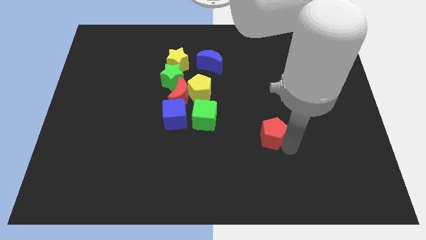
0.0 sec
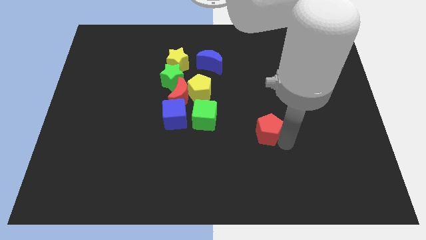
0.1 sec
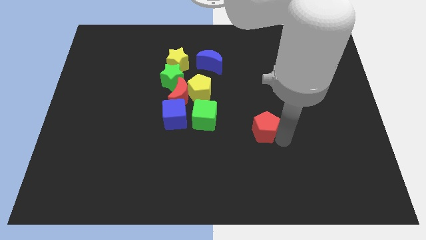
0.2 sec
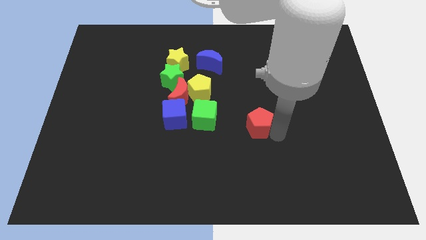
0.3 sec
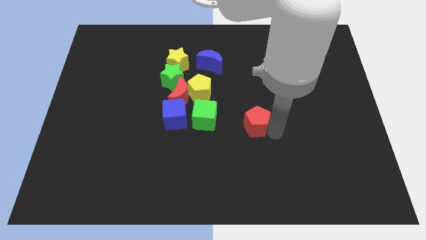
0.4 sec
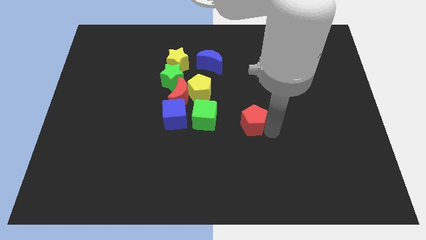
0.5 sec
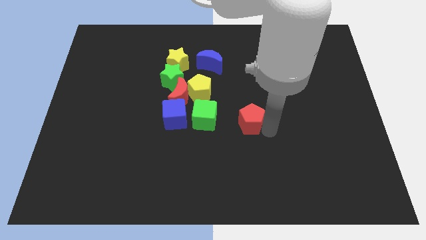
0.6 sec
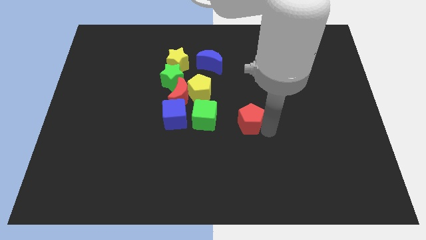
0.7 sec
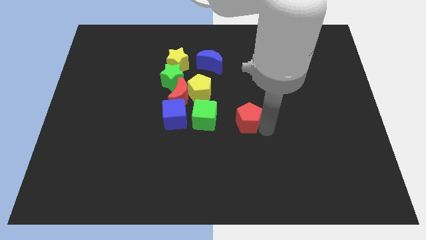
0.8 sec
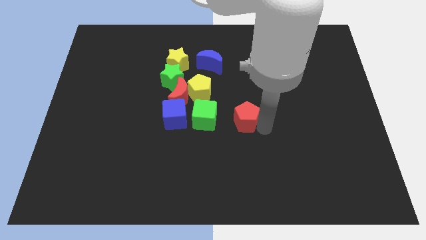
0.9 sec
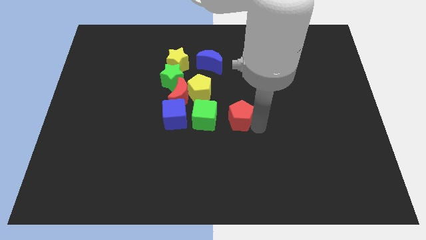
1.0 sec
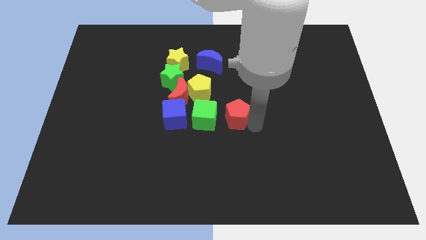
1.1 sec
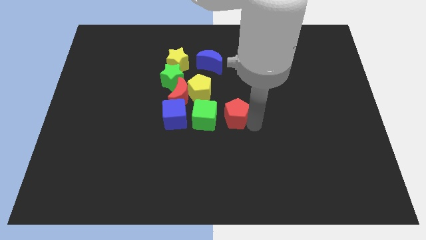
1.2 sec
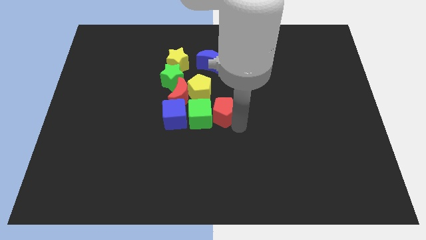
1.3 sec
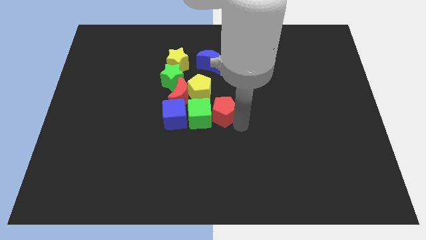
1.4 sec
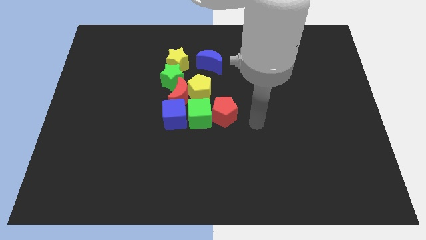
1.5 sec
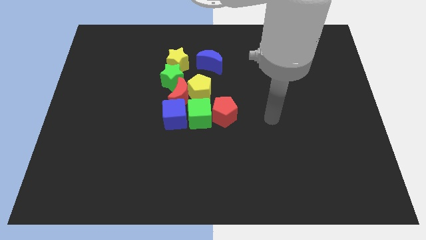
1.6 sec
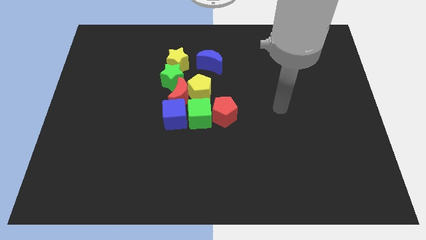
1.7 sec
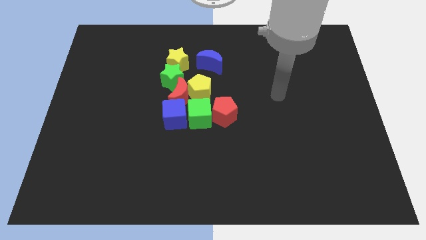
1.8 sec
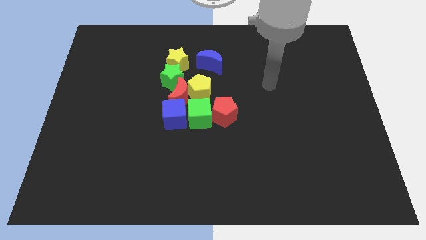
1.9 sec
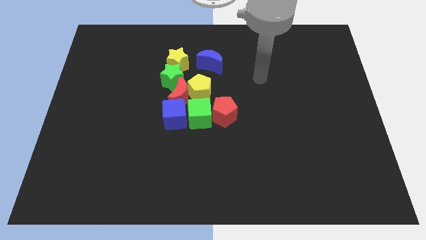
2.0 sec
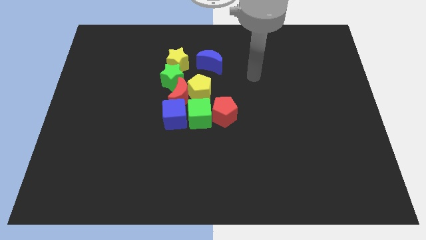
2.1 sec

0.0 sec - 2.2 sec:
push the red pentagon into the green cube

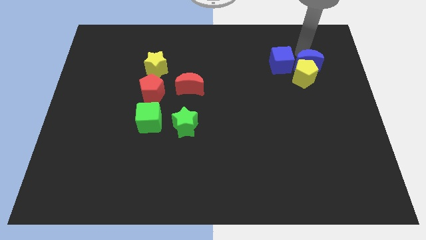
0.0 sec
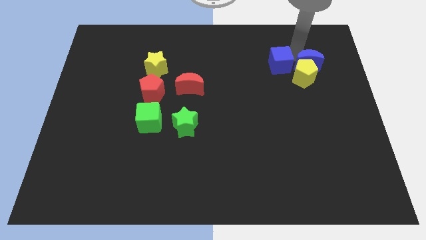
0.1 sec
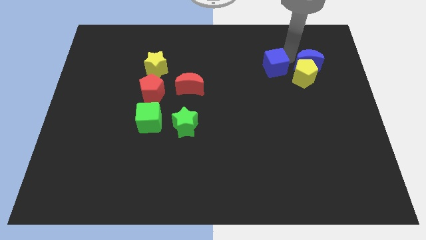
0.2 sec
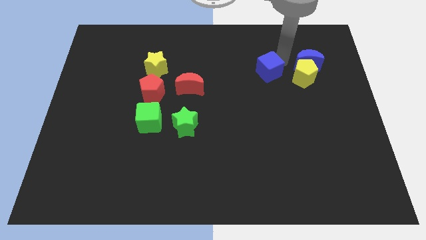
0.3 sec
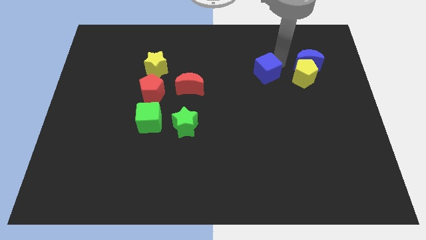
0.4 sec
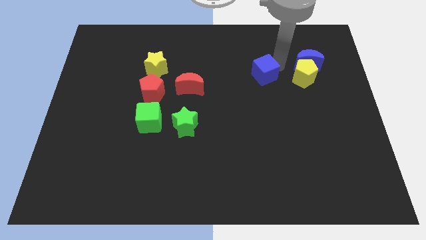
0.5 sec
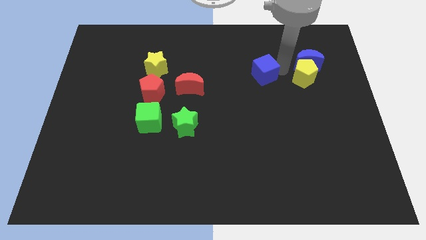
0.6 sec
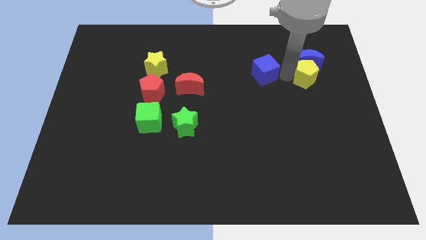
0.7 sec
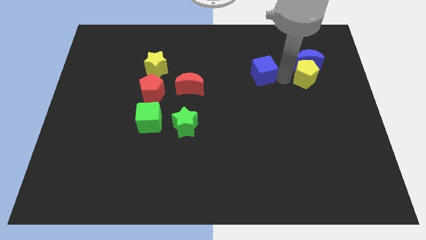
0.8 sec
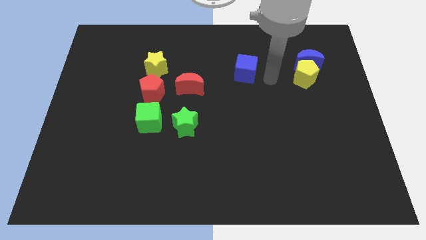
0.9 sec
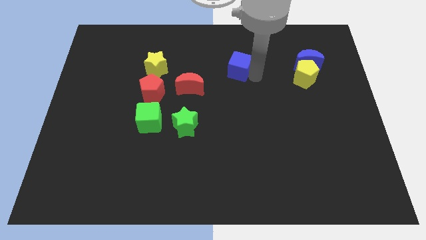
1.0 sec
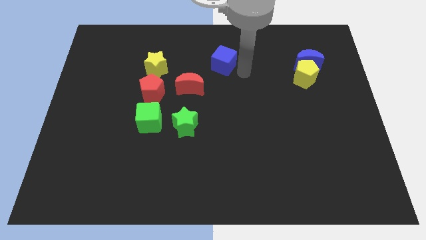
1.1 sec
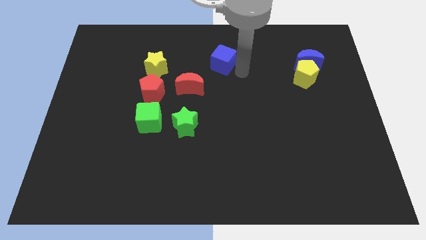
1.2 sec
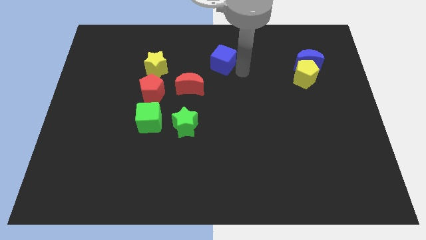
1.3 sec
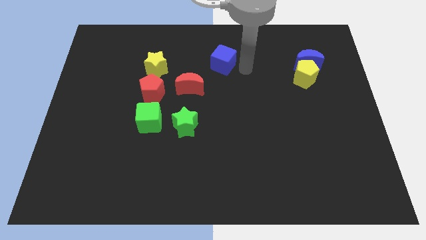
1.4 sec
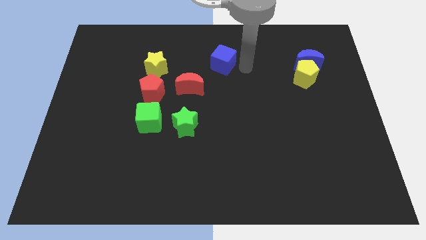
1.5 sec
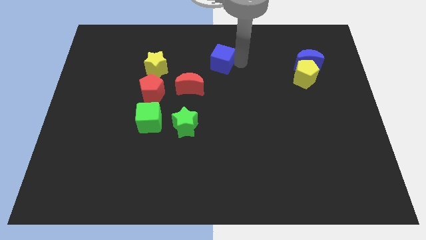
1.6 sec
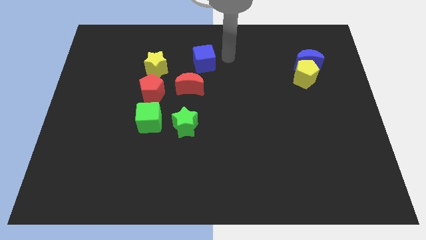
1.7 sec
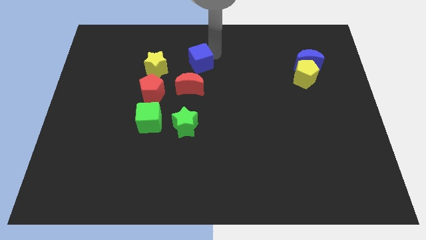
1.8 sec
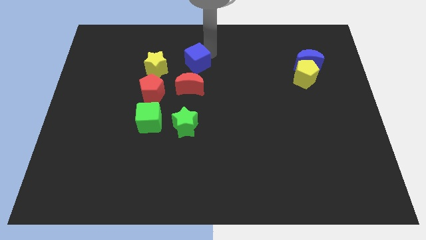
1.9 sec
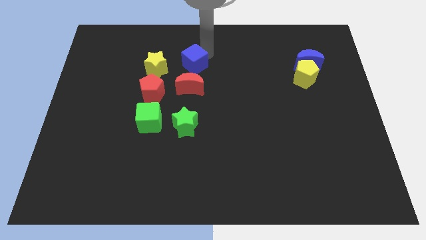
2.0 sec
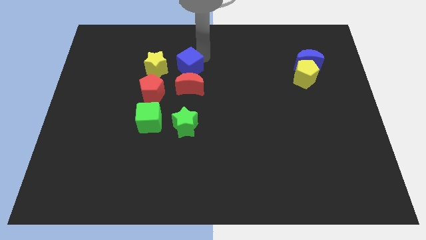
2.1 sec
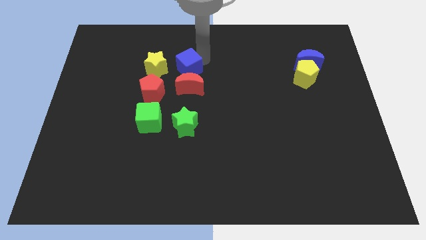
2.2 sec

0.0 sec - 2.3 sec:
push the blue cube to the top of the red crescent

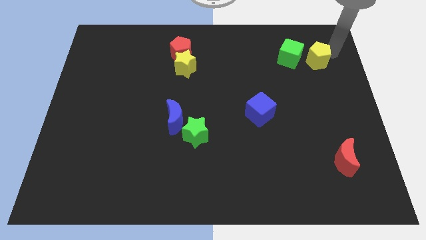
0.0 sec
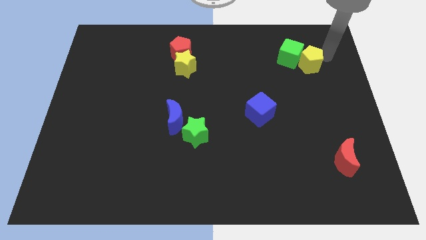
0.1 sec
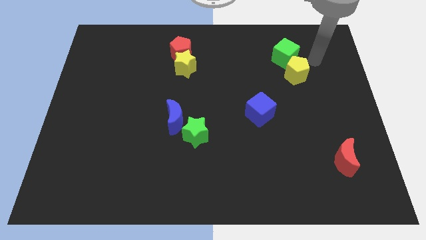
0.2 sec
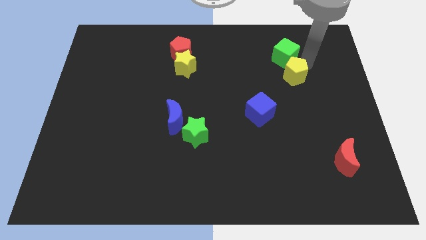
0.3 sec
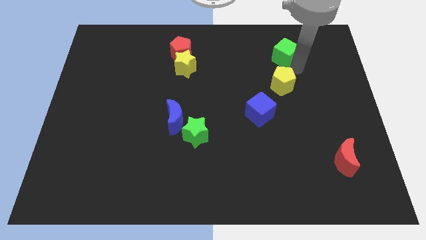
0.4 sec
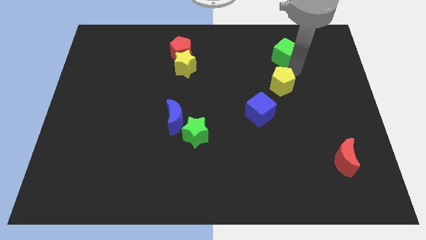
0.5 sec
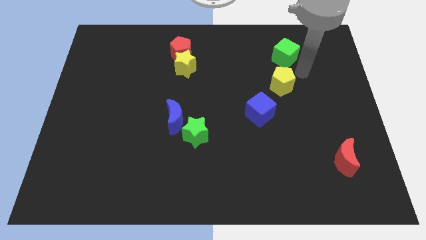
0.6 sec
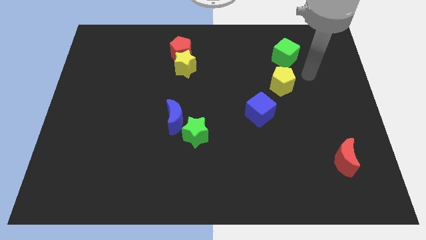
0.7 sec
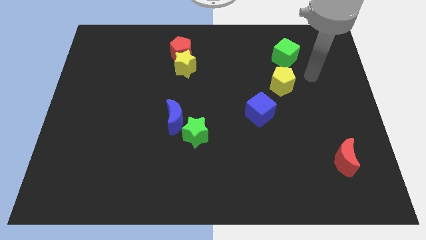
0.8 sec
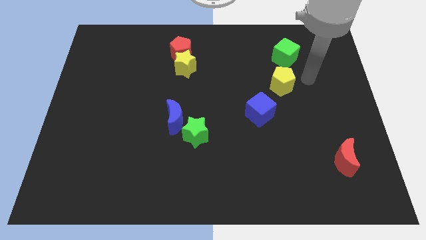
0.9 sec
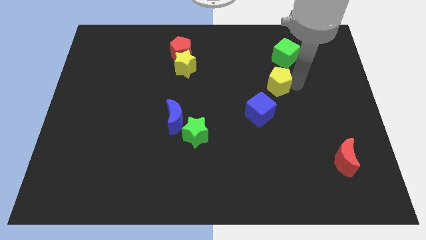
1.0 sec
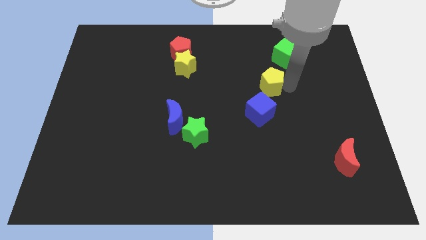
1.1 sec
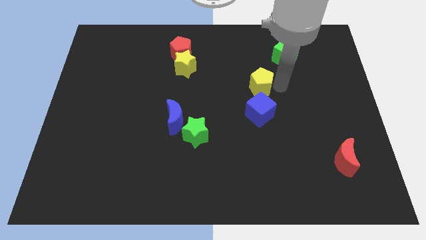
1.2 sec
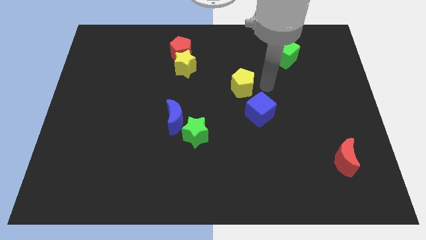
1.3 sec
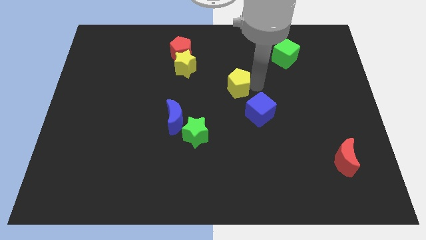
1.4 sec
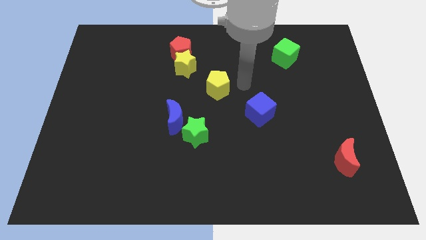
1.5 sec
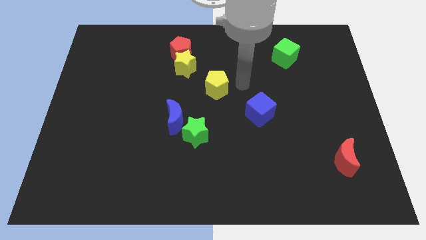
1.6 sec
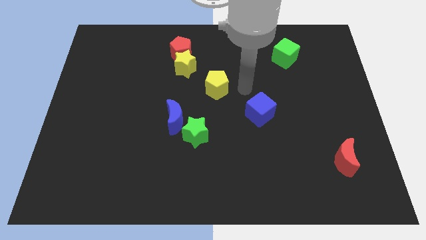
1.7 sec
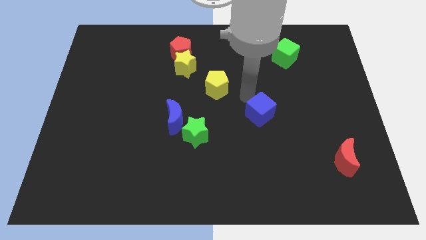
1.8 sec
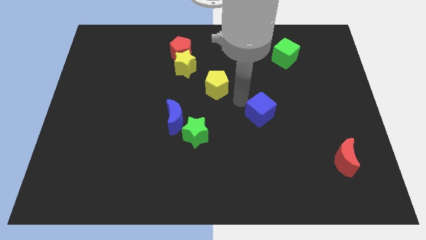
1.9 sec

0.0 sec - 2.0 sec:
push the yellow pentagon in between the yellow star and the blue cube

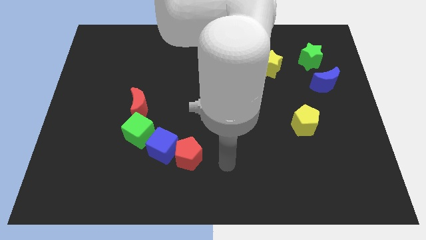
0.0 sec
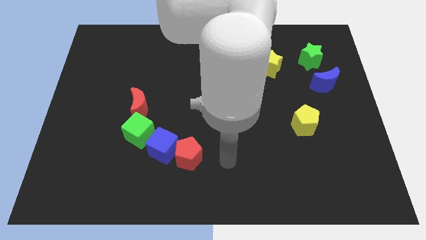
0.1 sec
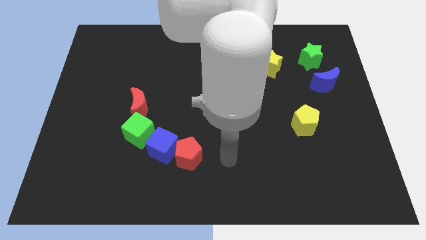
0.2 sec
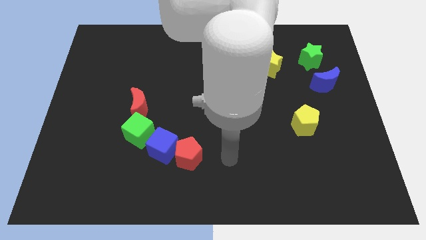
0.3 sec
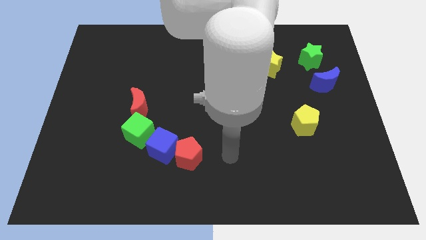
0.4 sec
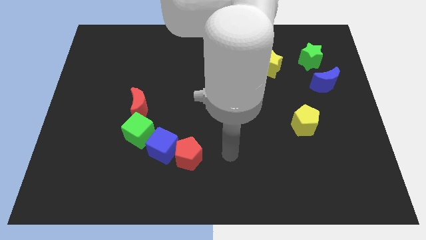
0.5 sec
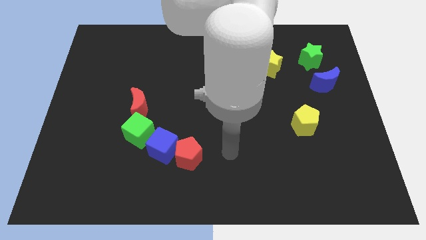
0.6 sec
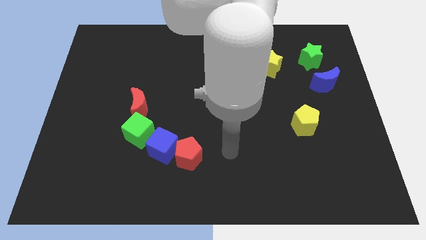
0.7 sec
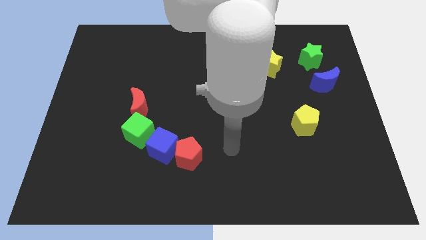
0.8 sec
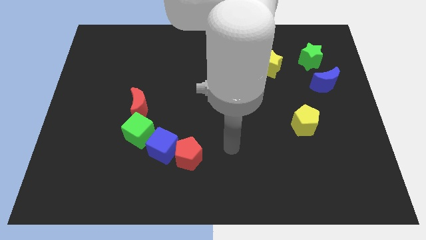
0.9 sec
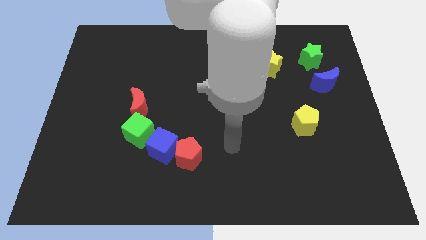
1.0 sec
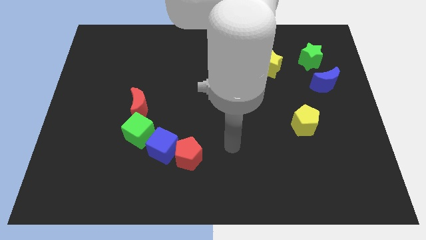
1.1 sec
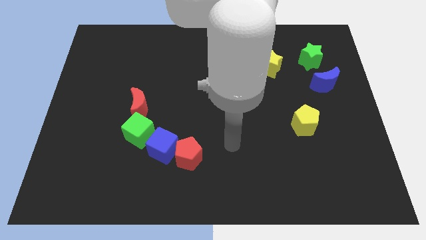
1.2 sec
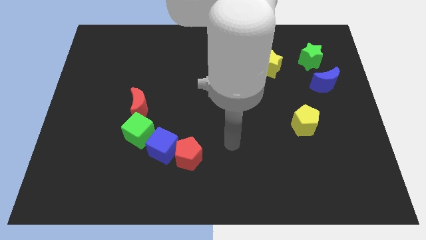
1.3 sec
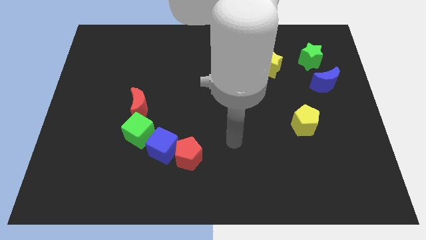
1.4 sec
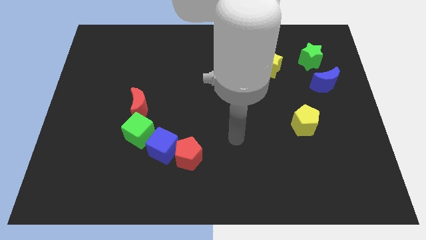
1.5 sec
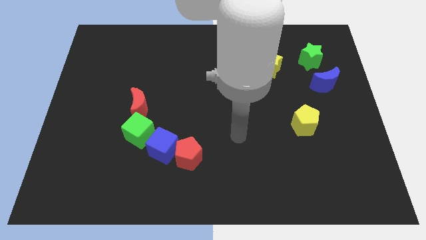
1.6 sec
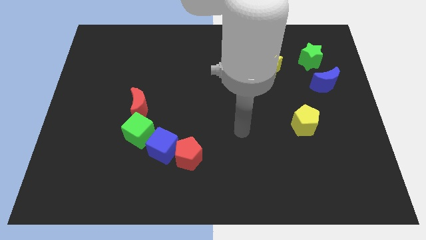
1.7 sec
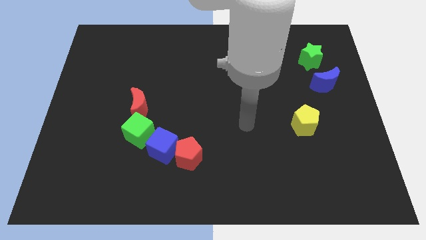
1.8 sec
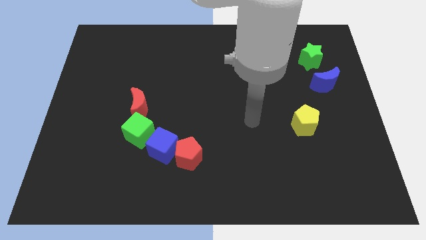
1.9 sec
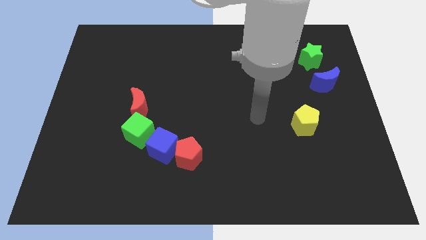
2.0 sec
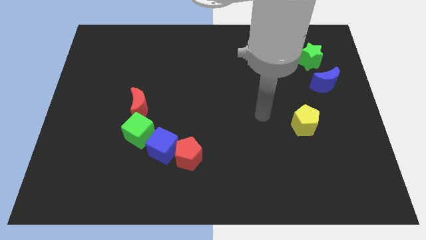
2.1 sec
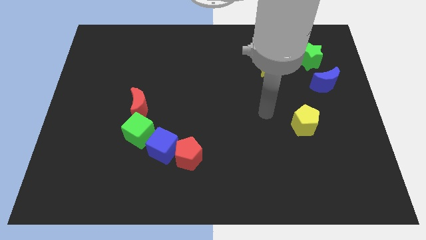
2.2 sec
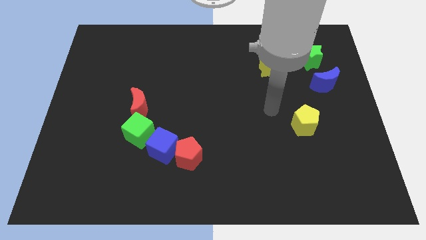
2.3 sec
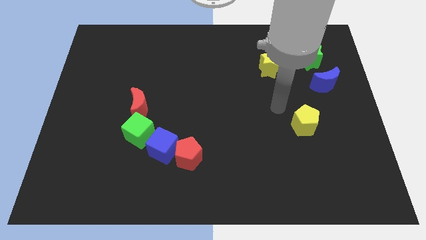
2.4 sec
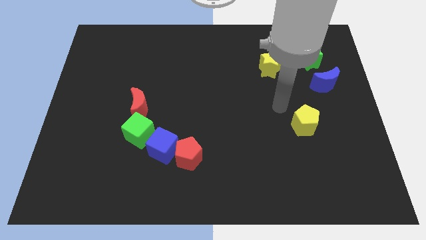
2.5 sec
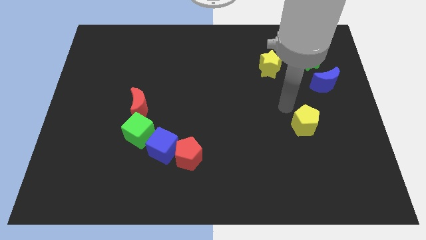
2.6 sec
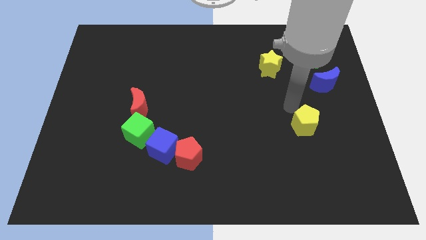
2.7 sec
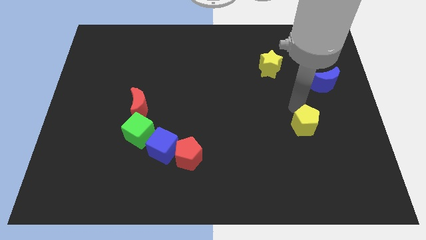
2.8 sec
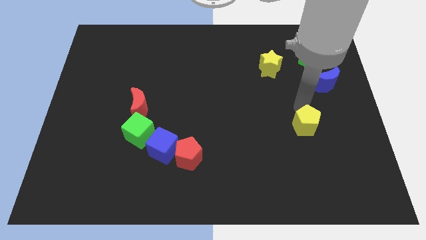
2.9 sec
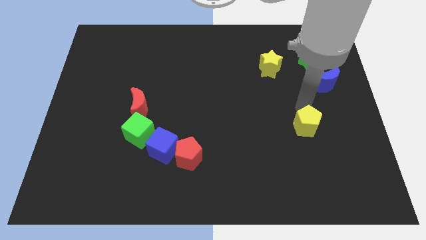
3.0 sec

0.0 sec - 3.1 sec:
tap your arm on top of yellow pentagon
